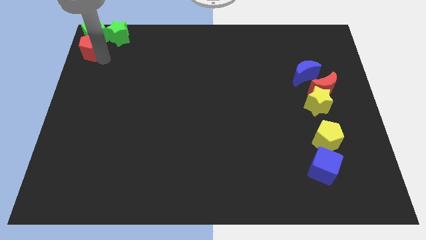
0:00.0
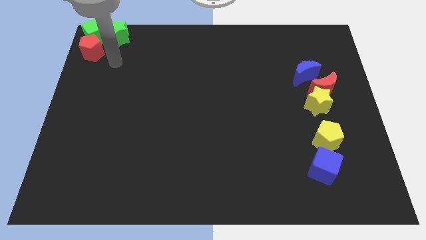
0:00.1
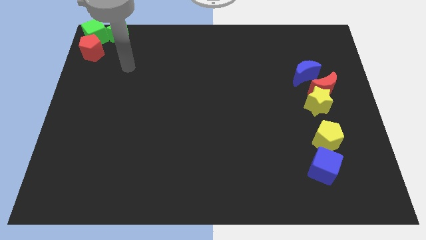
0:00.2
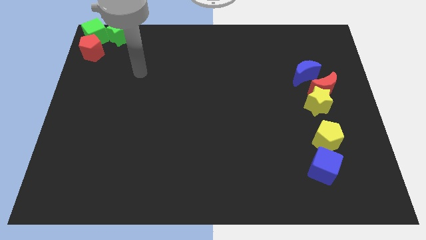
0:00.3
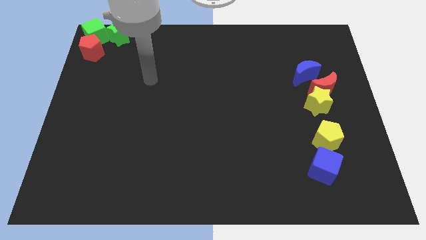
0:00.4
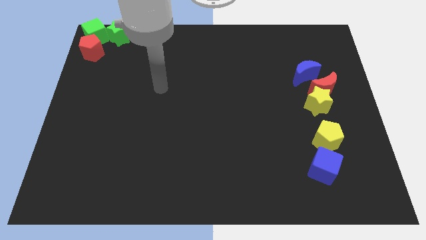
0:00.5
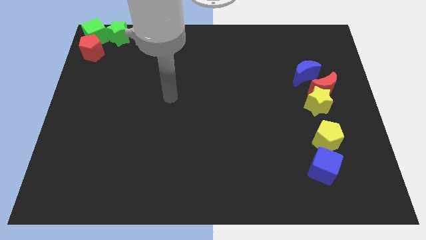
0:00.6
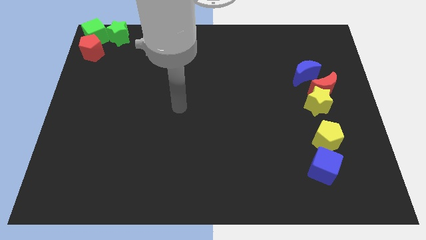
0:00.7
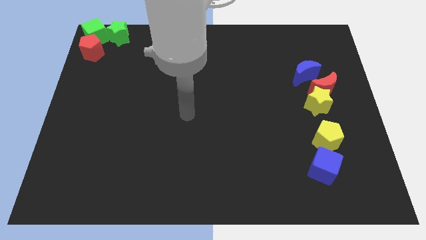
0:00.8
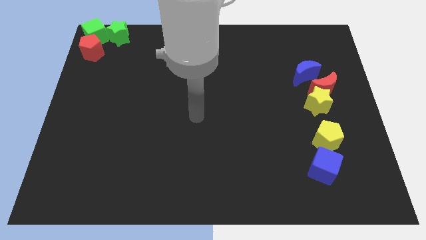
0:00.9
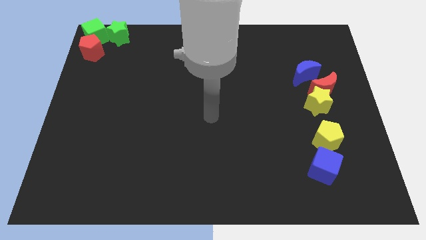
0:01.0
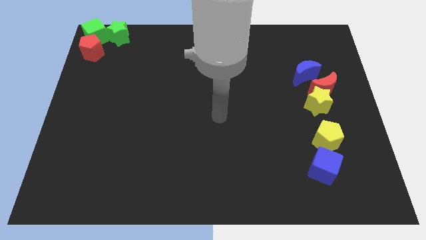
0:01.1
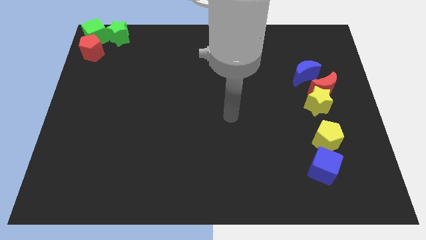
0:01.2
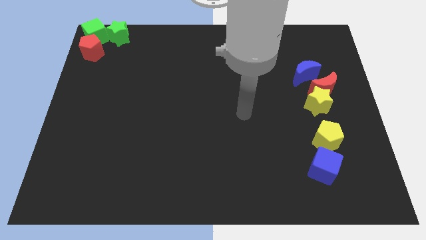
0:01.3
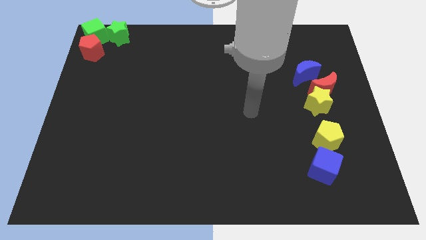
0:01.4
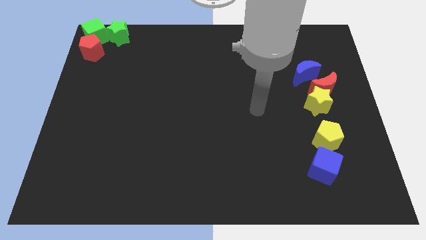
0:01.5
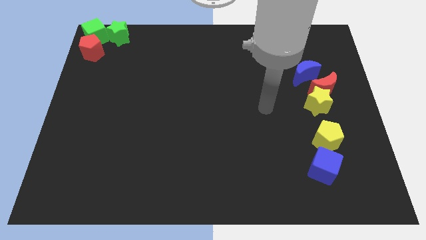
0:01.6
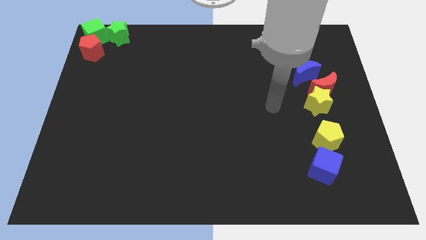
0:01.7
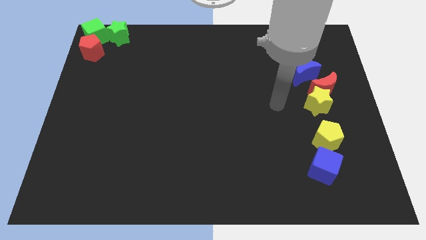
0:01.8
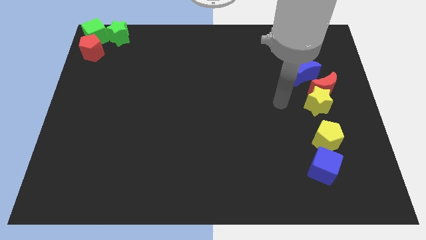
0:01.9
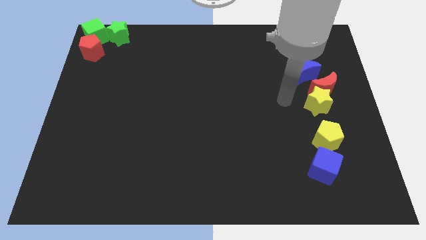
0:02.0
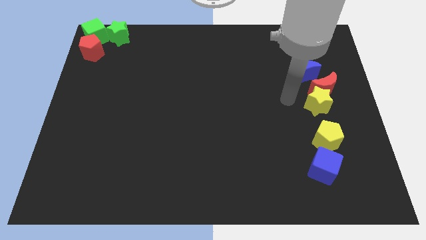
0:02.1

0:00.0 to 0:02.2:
move your arm closer to the blue crescent

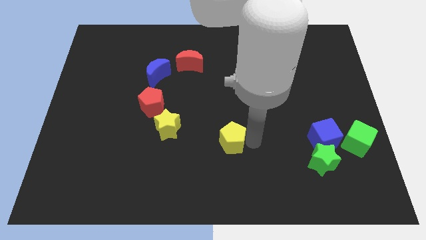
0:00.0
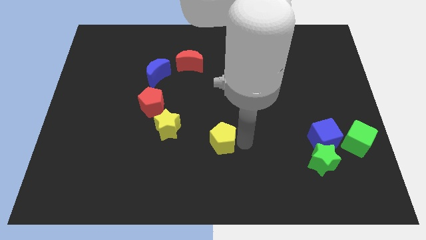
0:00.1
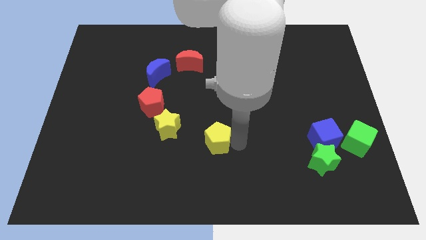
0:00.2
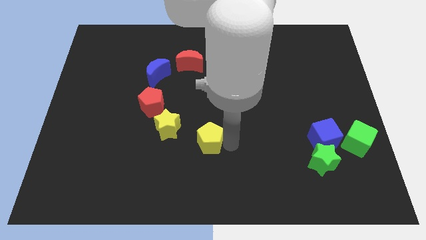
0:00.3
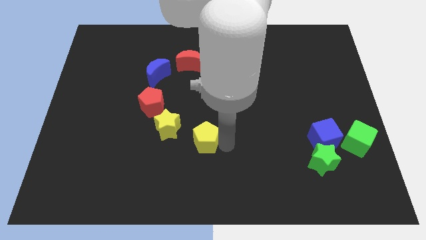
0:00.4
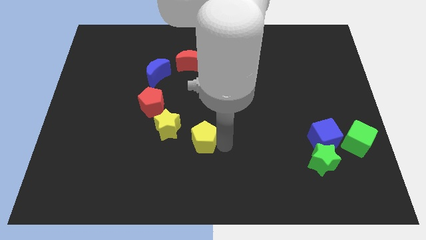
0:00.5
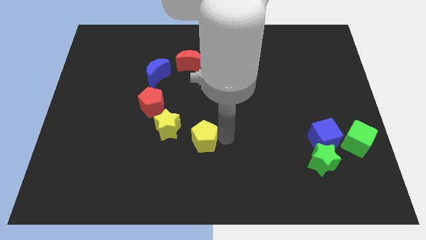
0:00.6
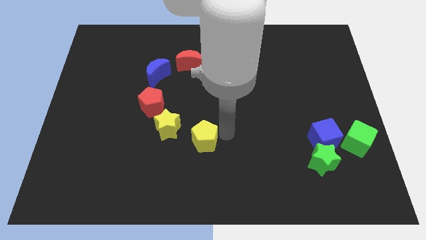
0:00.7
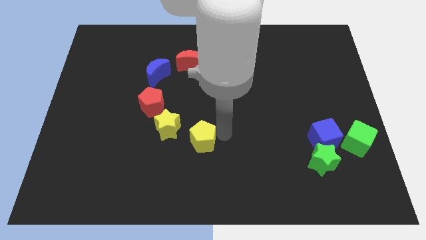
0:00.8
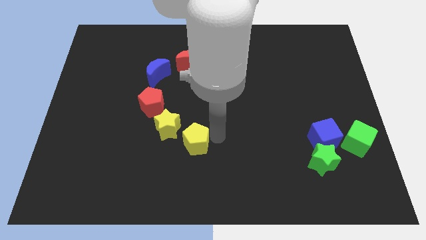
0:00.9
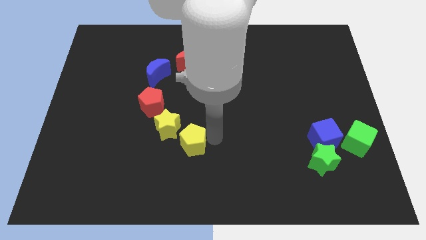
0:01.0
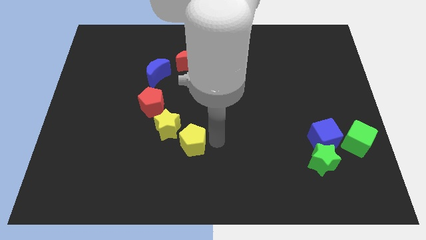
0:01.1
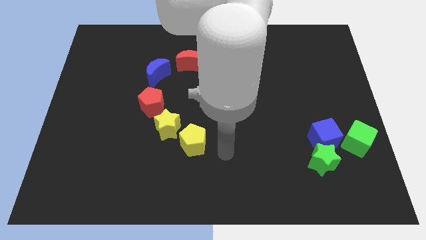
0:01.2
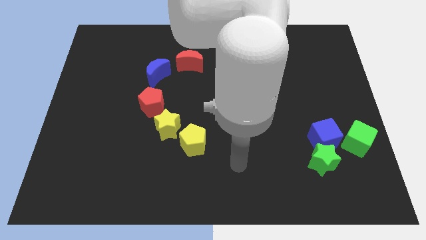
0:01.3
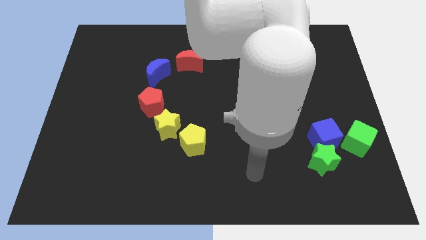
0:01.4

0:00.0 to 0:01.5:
place the yellow pentagon at the bottom right of the yellow star

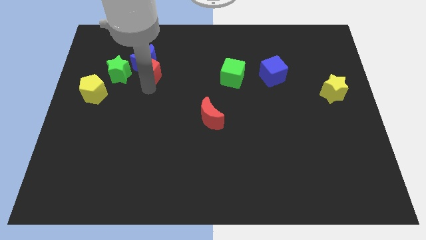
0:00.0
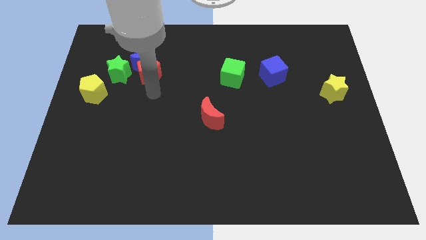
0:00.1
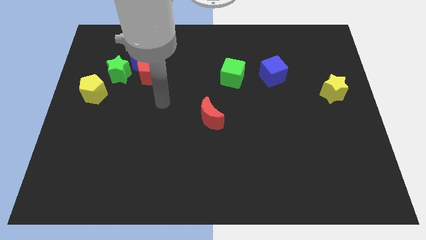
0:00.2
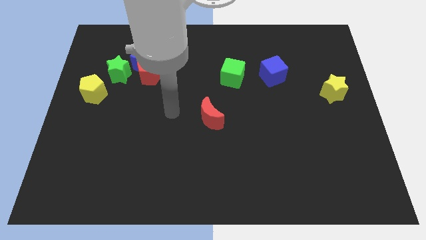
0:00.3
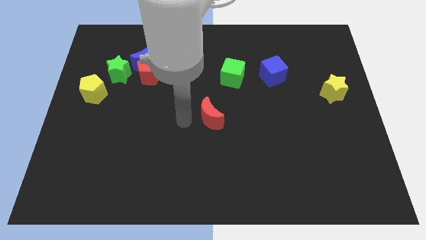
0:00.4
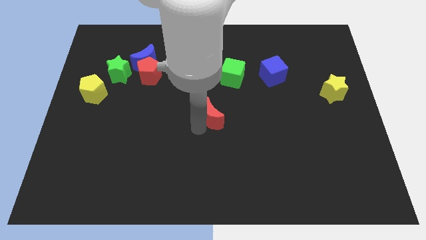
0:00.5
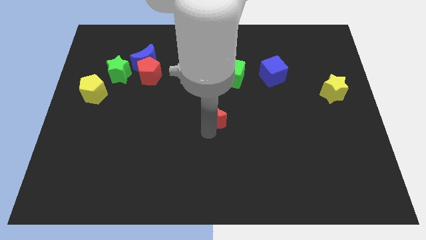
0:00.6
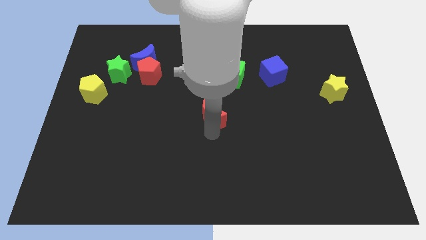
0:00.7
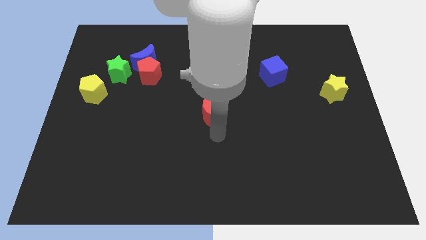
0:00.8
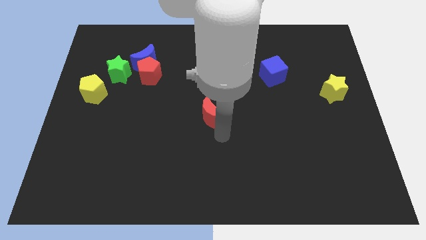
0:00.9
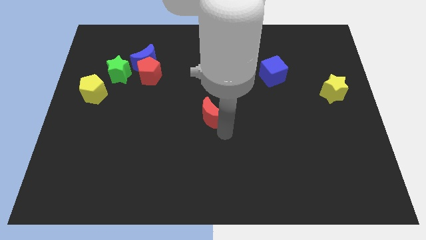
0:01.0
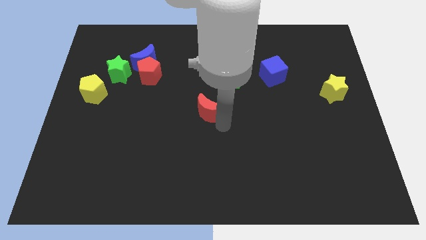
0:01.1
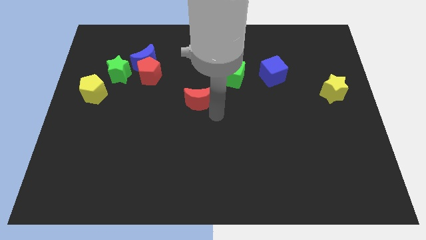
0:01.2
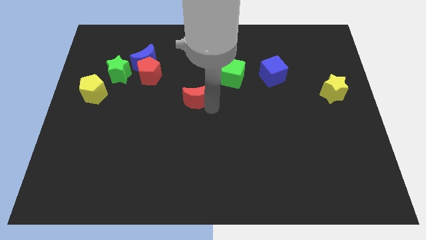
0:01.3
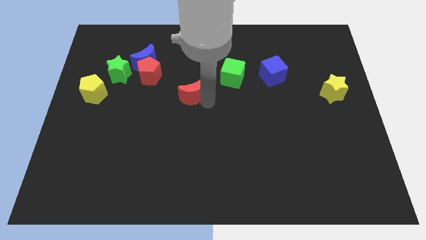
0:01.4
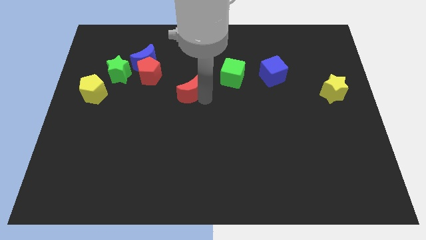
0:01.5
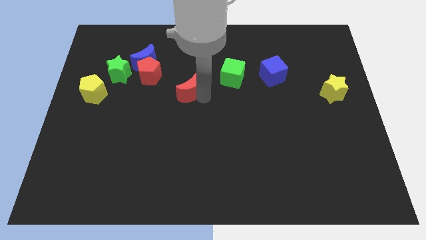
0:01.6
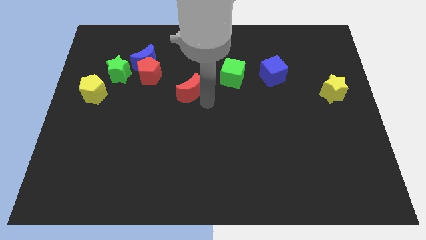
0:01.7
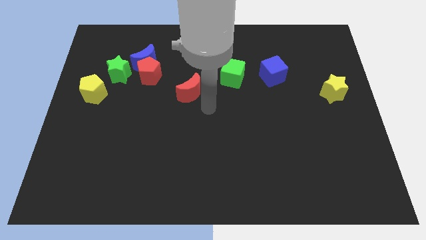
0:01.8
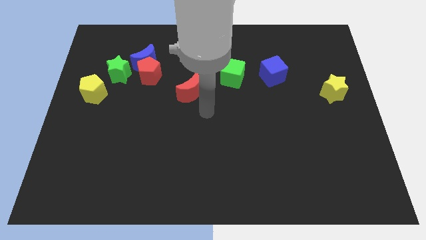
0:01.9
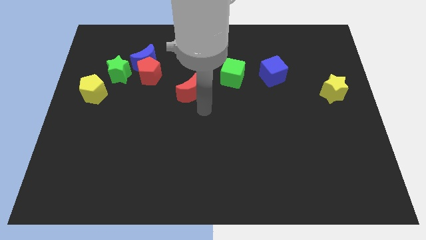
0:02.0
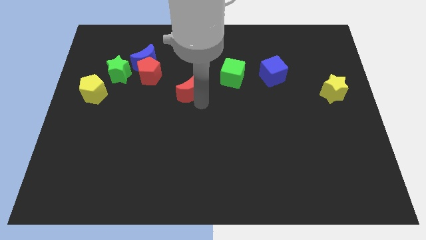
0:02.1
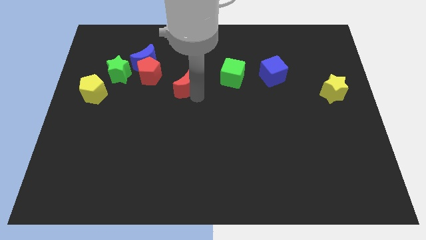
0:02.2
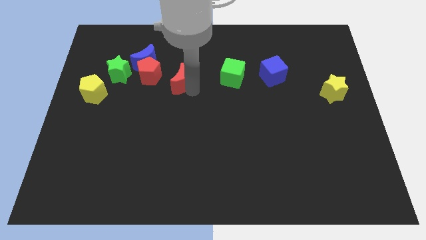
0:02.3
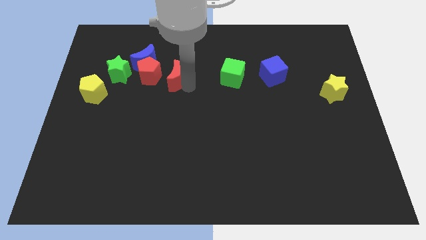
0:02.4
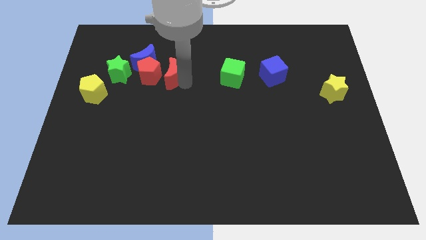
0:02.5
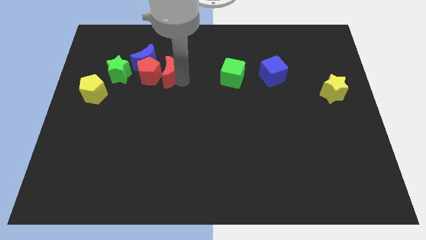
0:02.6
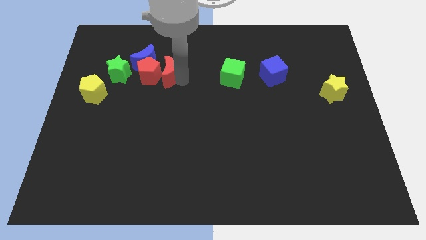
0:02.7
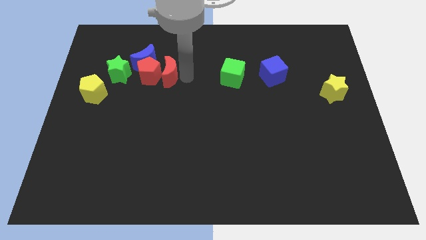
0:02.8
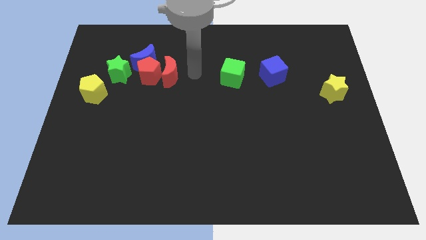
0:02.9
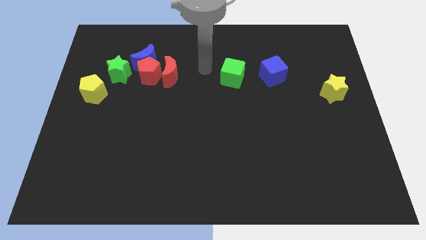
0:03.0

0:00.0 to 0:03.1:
put the red crescent at the right side of the red pentagon

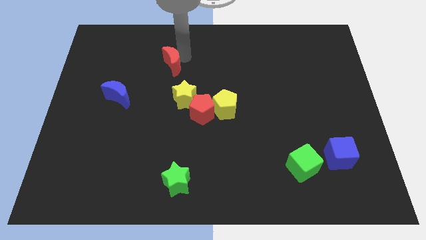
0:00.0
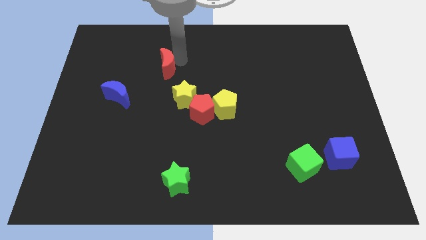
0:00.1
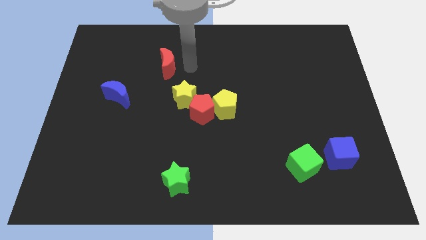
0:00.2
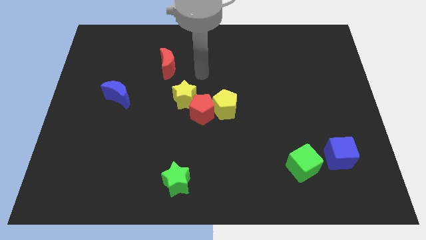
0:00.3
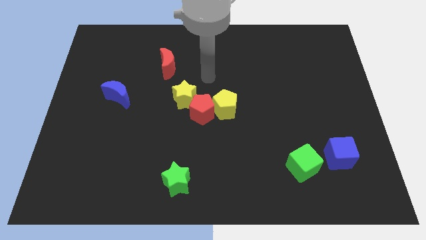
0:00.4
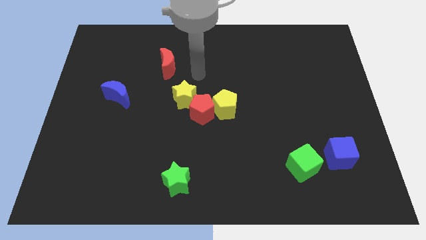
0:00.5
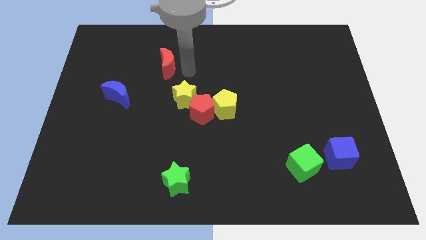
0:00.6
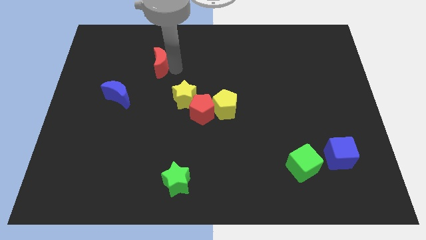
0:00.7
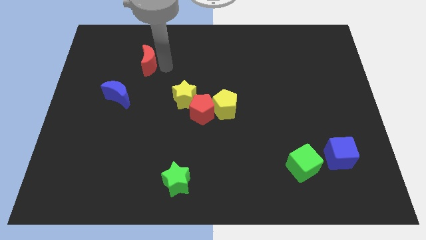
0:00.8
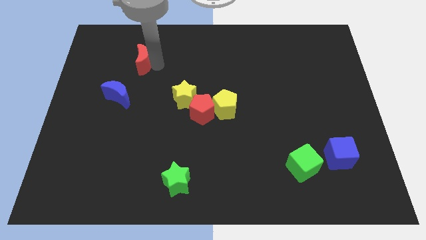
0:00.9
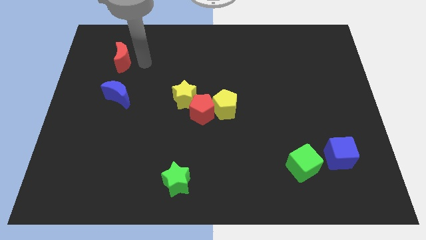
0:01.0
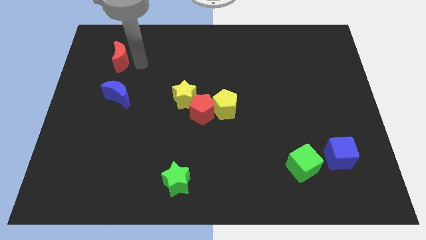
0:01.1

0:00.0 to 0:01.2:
place the red moon at the top of blue moon

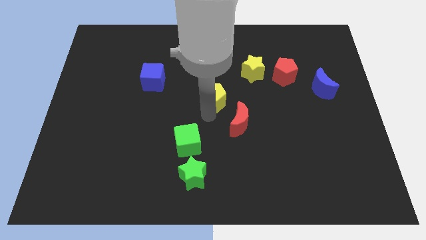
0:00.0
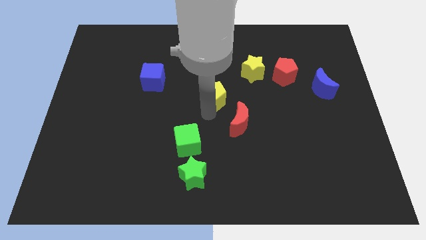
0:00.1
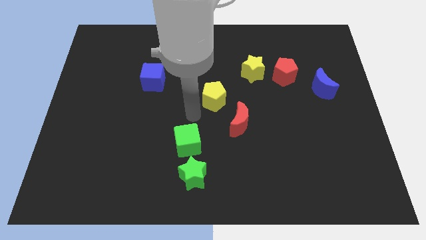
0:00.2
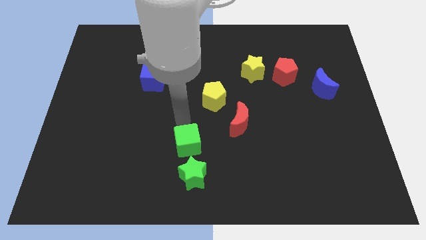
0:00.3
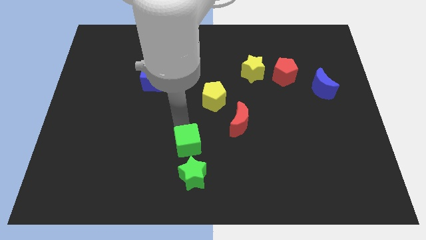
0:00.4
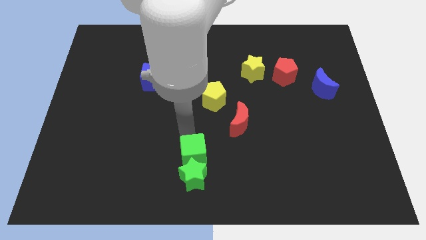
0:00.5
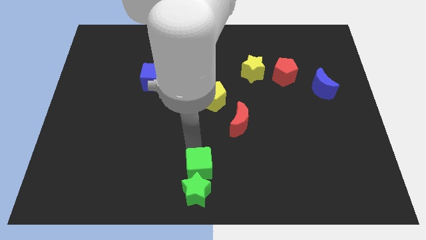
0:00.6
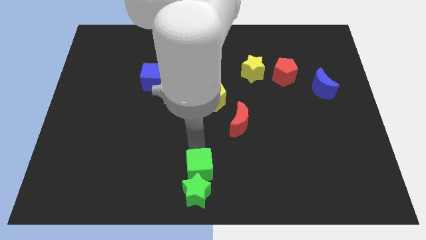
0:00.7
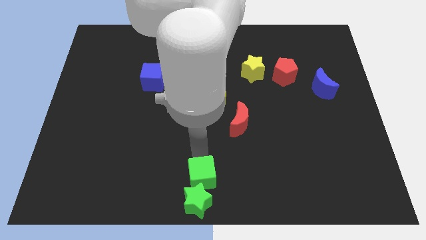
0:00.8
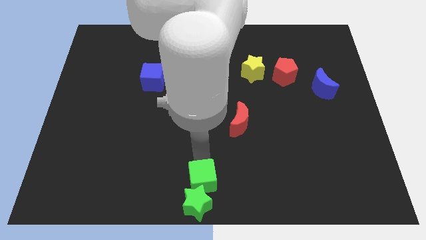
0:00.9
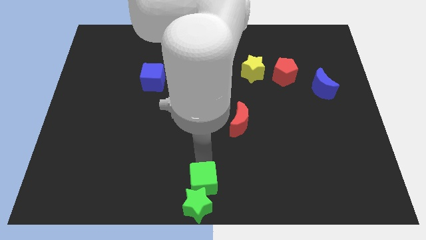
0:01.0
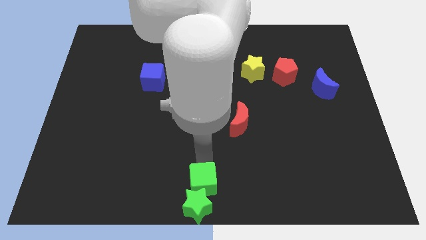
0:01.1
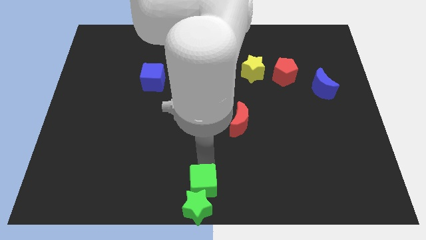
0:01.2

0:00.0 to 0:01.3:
push the green cube into the green star
